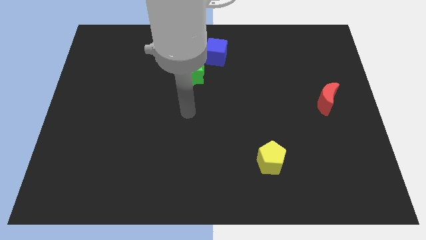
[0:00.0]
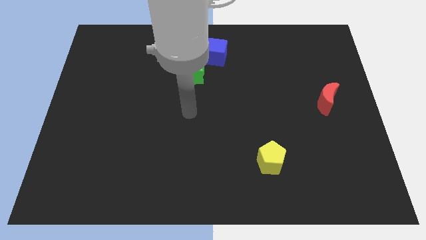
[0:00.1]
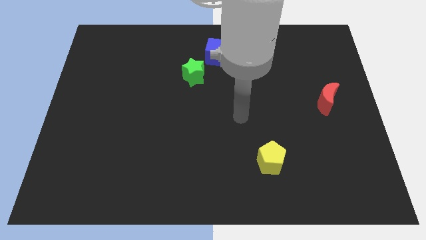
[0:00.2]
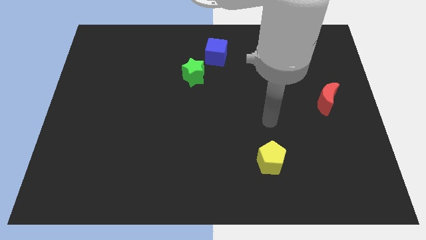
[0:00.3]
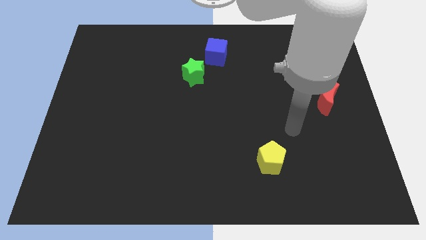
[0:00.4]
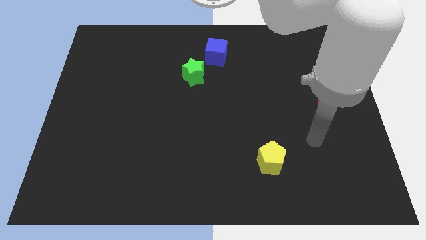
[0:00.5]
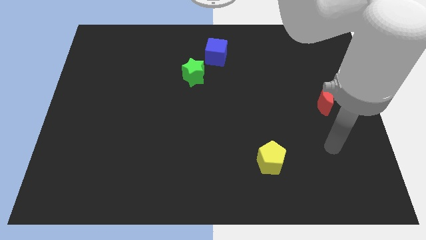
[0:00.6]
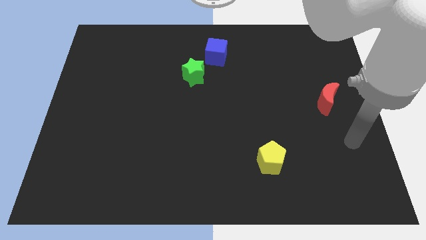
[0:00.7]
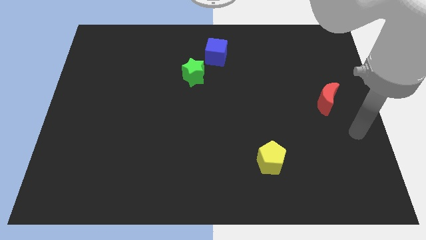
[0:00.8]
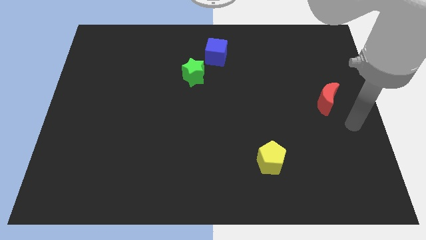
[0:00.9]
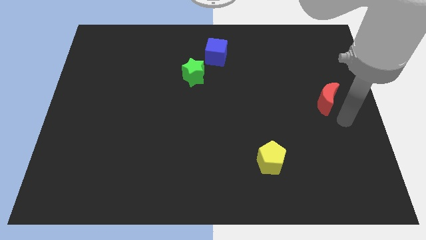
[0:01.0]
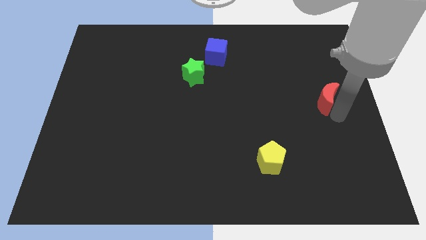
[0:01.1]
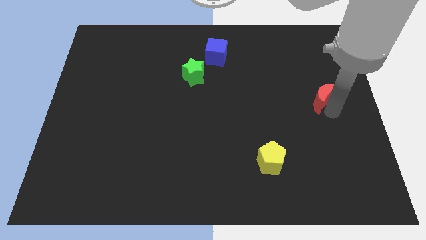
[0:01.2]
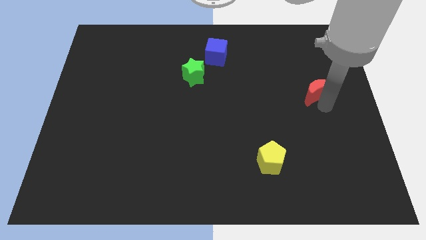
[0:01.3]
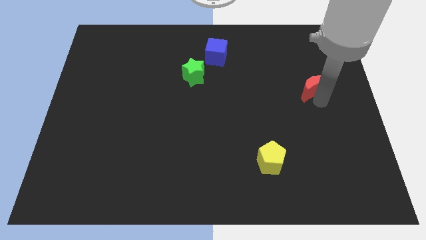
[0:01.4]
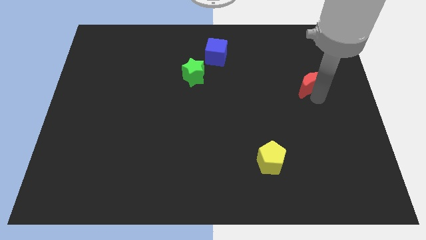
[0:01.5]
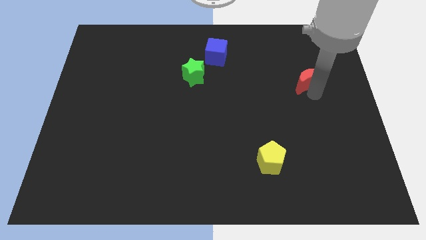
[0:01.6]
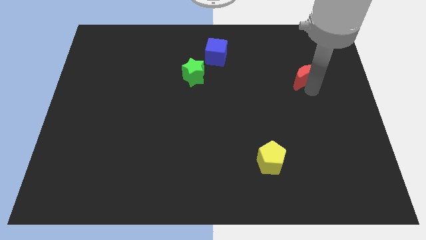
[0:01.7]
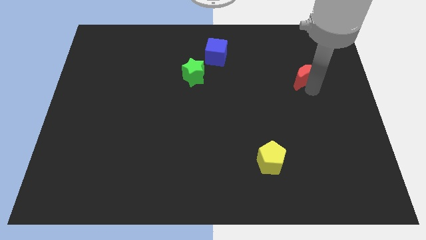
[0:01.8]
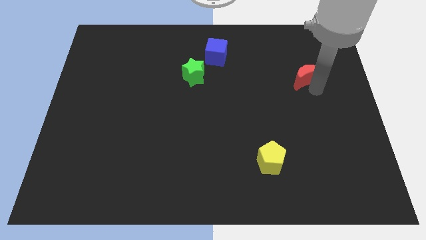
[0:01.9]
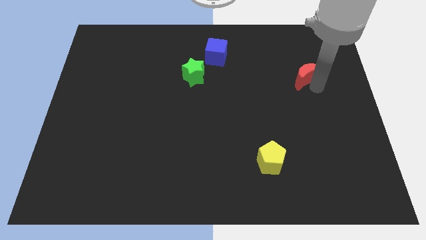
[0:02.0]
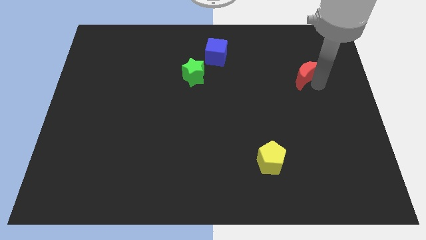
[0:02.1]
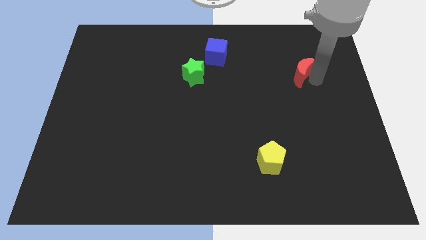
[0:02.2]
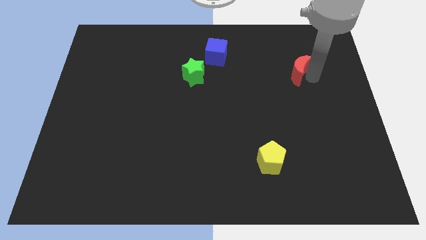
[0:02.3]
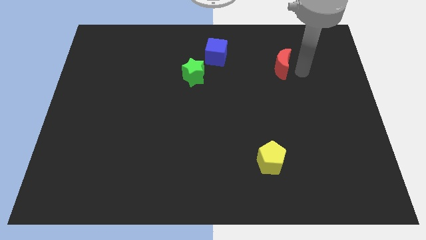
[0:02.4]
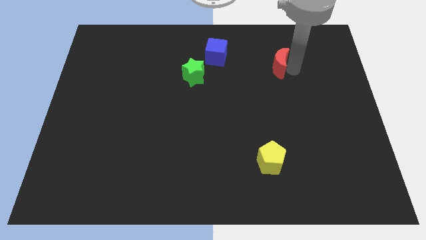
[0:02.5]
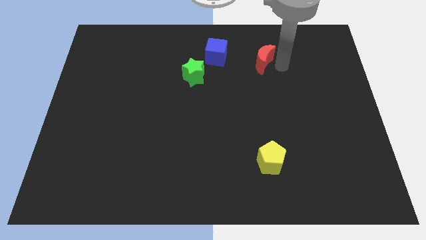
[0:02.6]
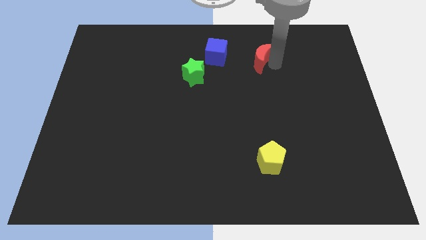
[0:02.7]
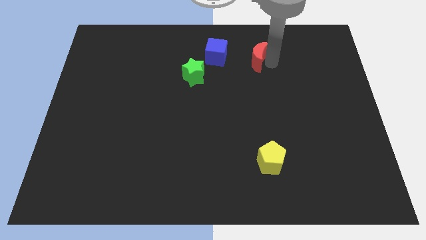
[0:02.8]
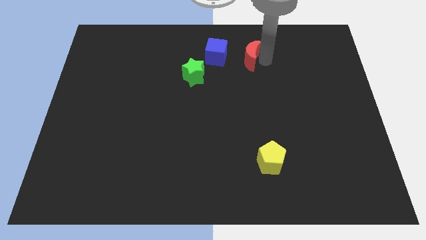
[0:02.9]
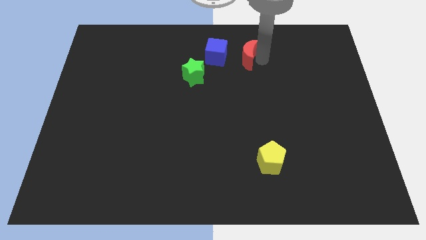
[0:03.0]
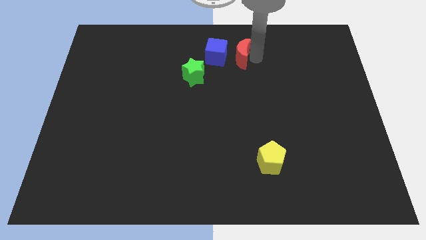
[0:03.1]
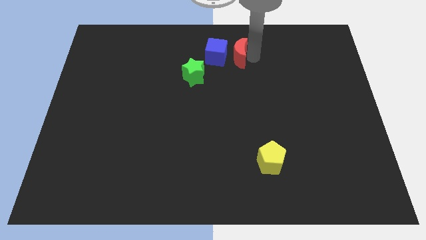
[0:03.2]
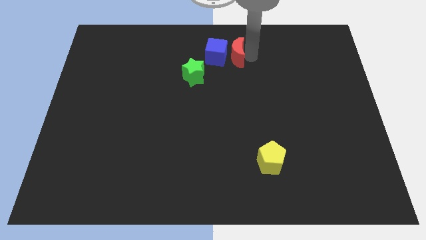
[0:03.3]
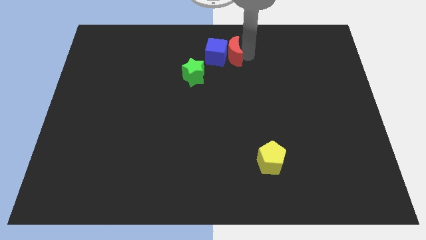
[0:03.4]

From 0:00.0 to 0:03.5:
move the red block close to the cube

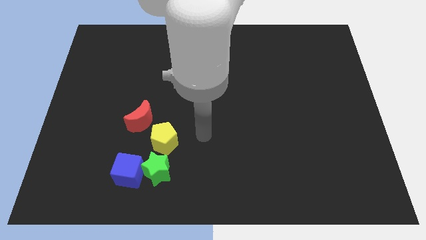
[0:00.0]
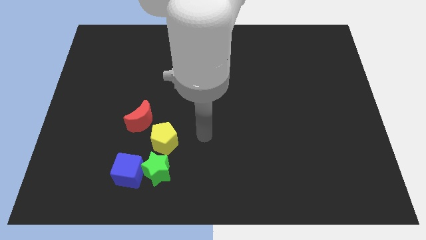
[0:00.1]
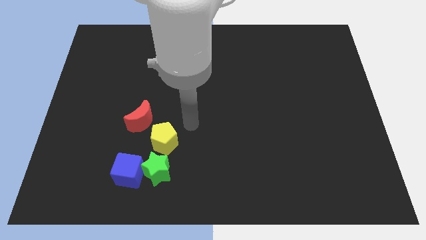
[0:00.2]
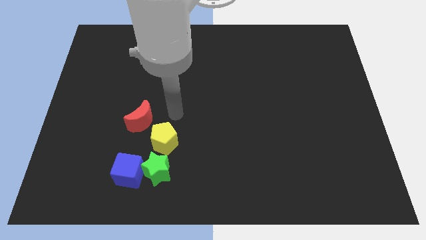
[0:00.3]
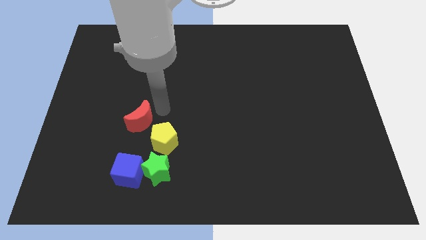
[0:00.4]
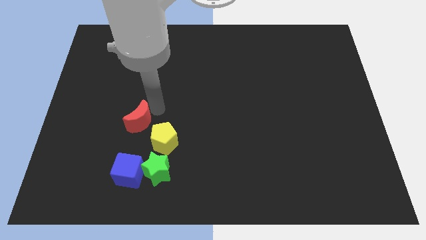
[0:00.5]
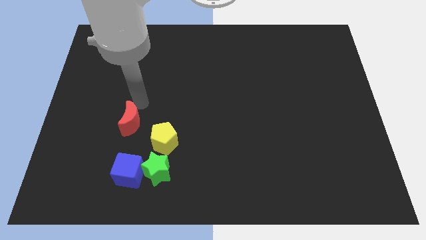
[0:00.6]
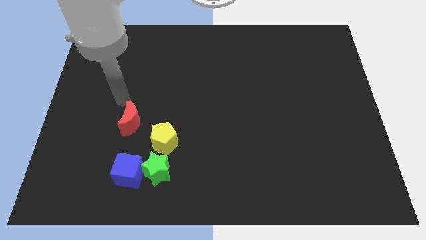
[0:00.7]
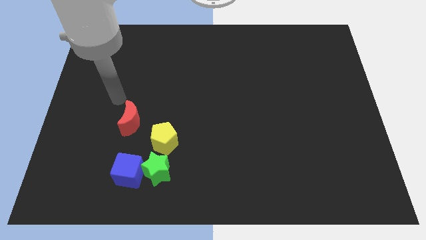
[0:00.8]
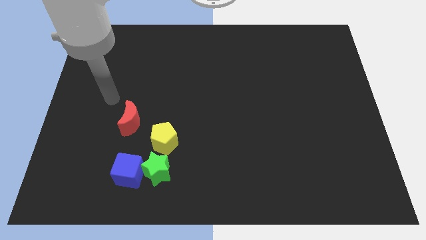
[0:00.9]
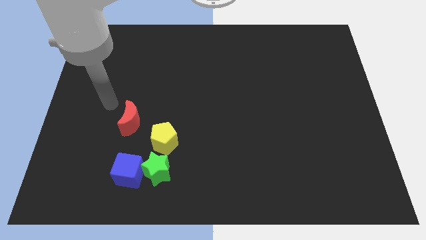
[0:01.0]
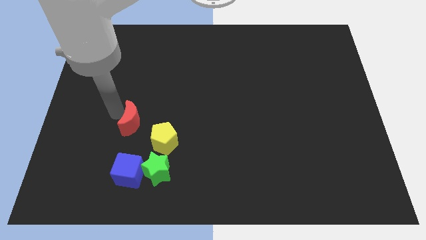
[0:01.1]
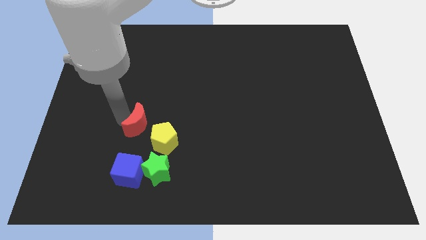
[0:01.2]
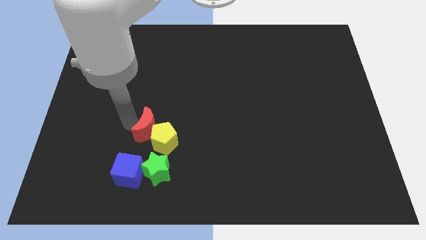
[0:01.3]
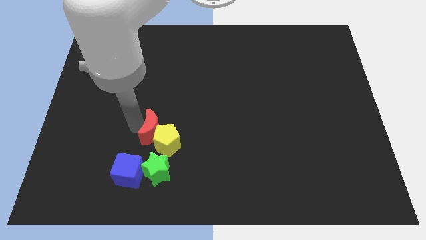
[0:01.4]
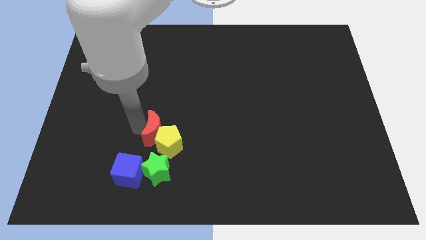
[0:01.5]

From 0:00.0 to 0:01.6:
move the red moon towards the yellow pentagon

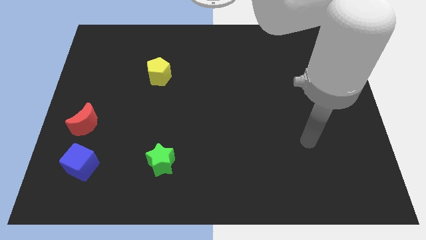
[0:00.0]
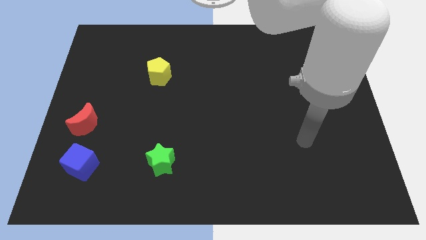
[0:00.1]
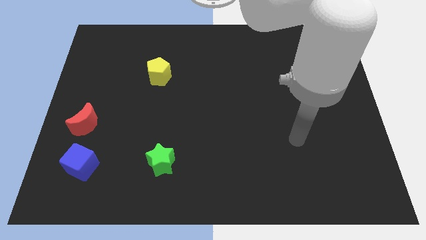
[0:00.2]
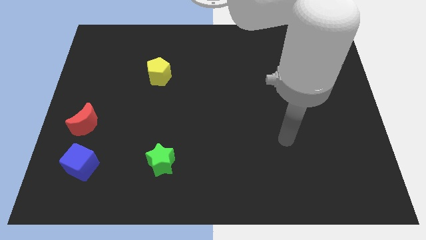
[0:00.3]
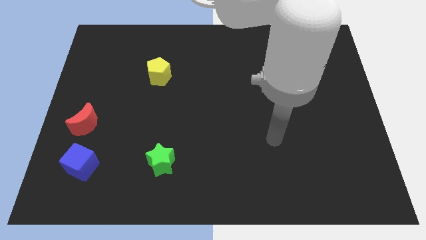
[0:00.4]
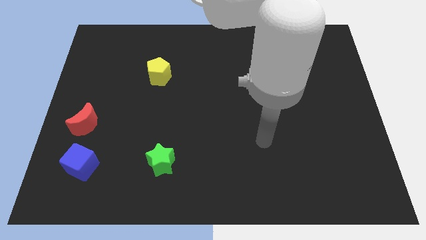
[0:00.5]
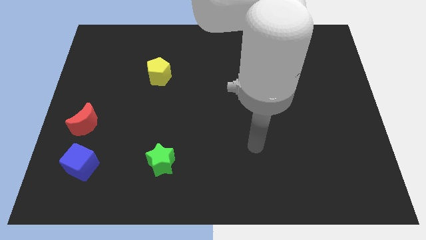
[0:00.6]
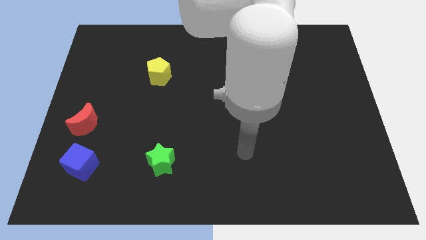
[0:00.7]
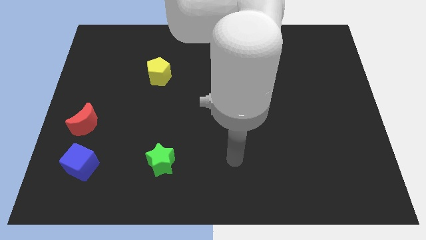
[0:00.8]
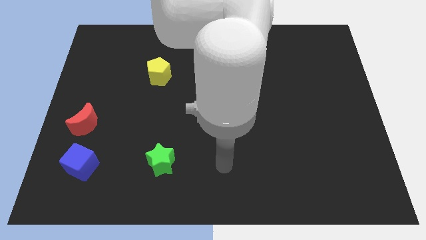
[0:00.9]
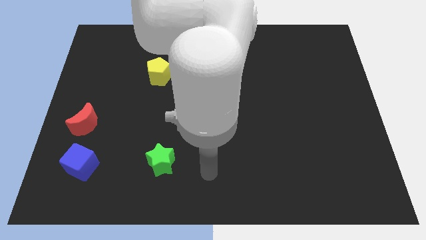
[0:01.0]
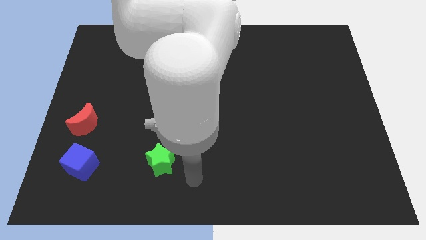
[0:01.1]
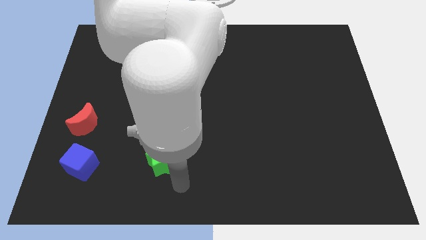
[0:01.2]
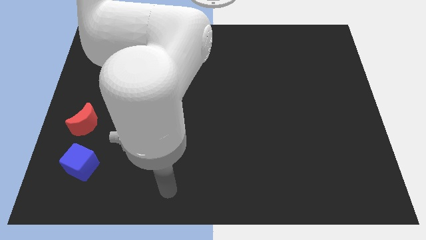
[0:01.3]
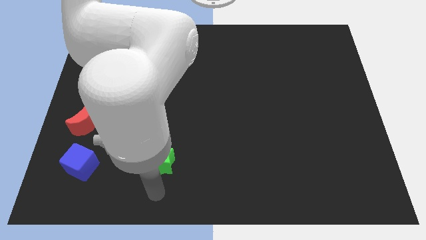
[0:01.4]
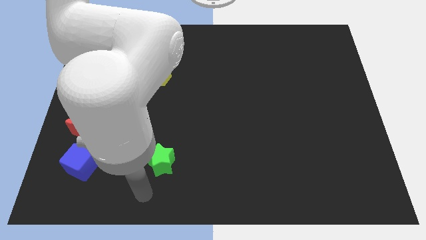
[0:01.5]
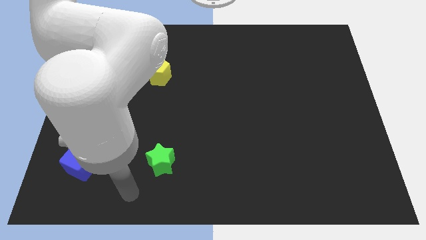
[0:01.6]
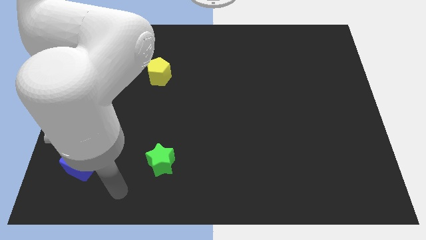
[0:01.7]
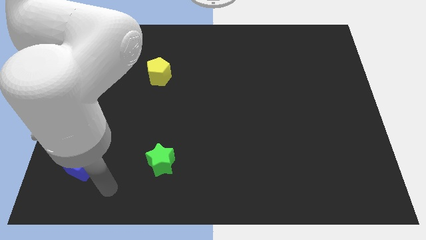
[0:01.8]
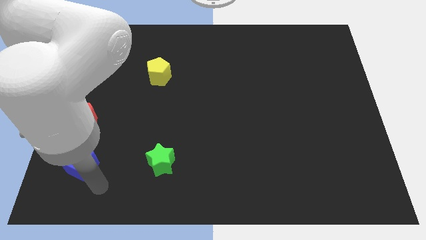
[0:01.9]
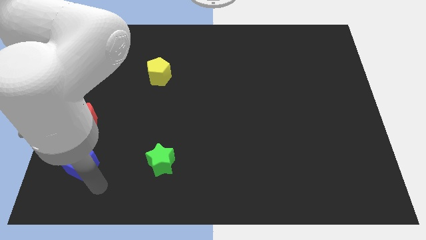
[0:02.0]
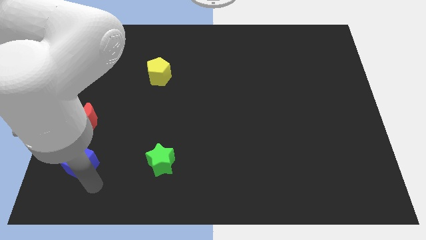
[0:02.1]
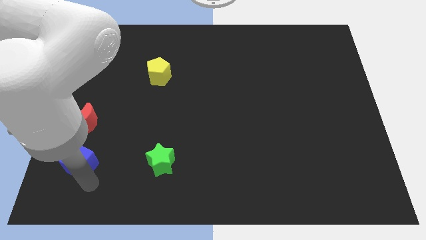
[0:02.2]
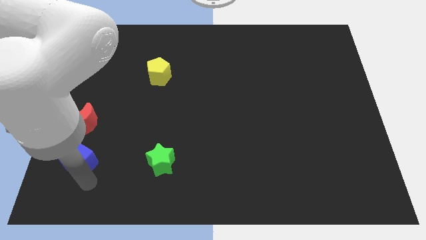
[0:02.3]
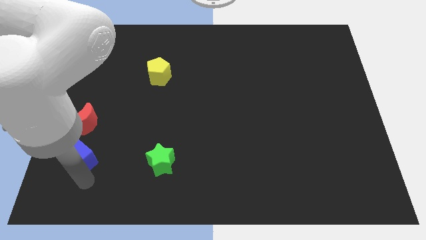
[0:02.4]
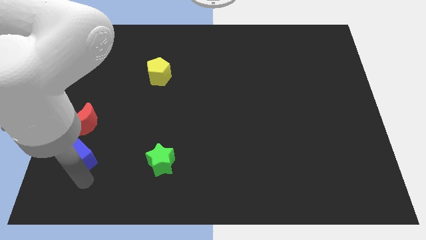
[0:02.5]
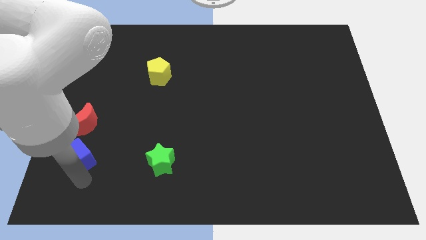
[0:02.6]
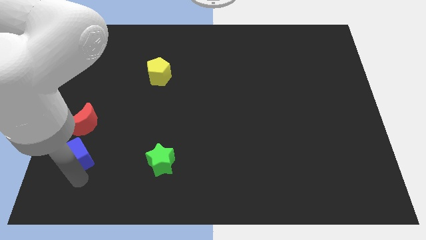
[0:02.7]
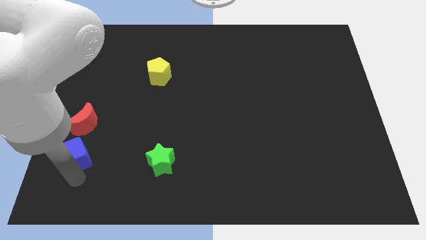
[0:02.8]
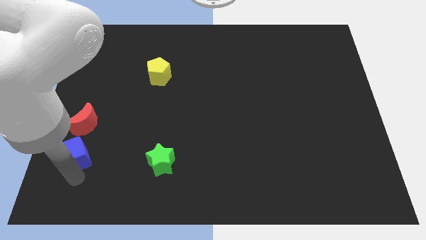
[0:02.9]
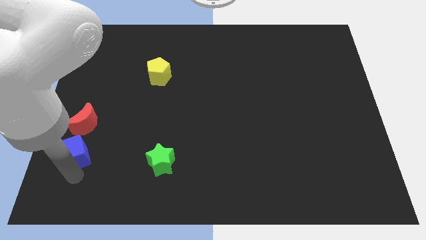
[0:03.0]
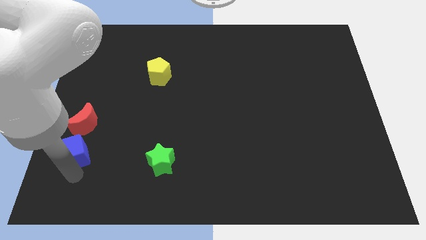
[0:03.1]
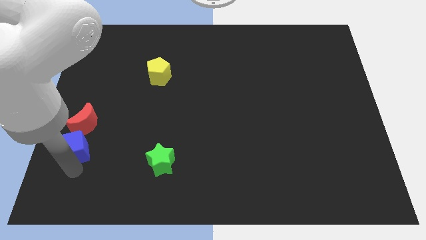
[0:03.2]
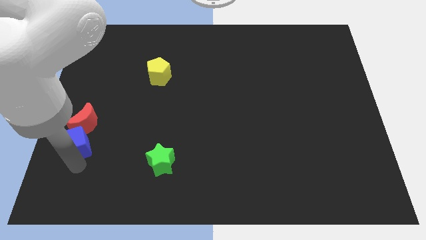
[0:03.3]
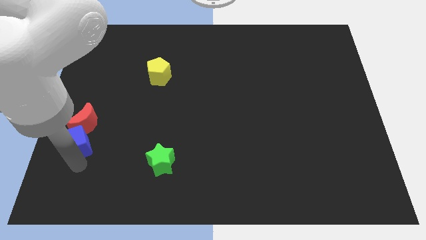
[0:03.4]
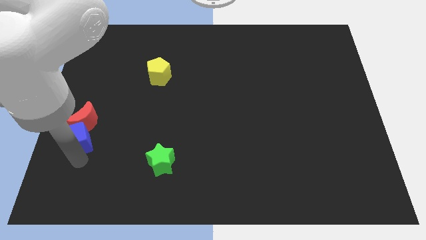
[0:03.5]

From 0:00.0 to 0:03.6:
push the cube to the red moon
